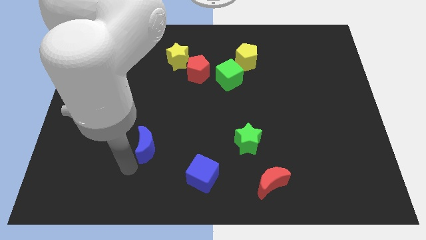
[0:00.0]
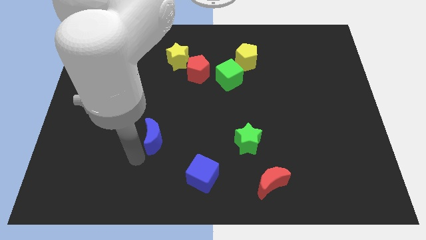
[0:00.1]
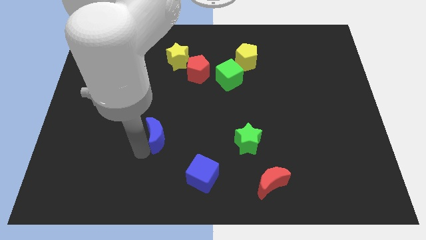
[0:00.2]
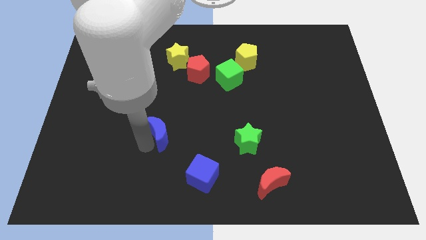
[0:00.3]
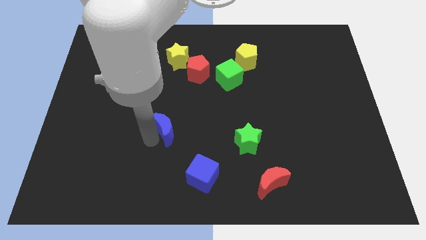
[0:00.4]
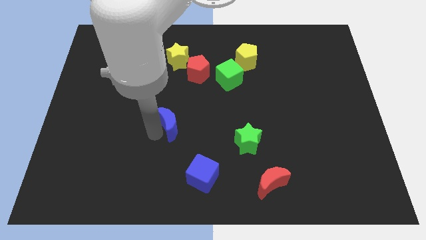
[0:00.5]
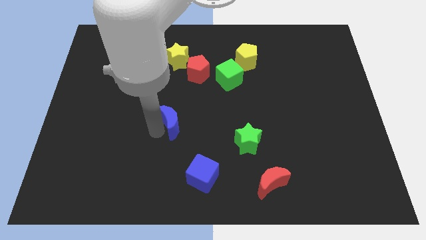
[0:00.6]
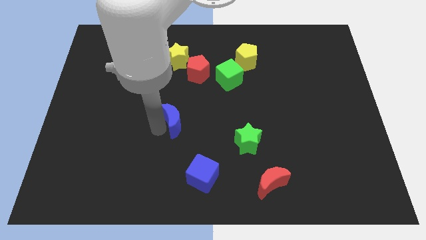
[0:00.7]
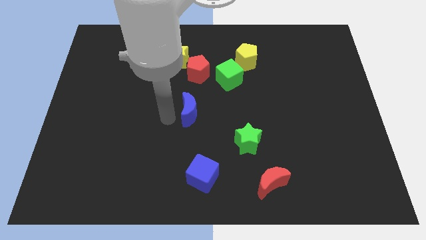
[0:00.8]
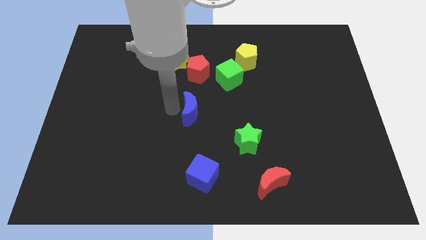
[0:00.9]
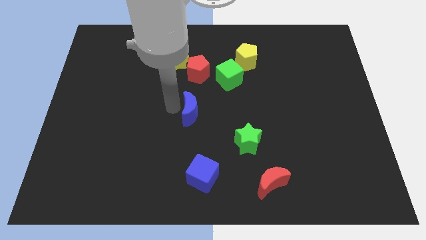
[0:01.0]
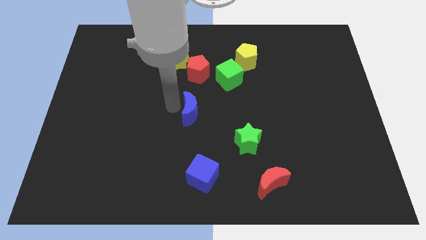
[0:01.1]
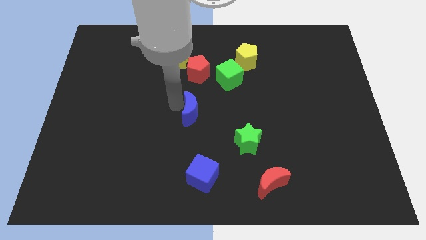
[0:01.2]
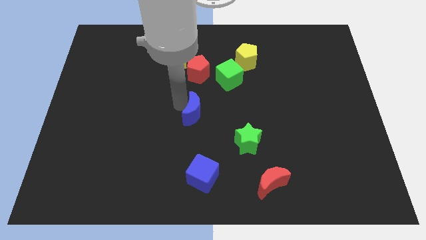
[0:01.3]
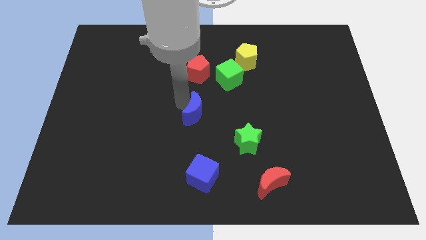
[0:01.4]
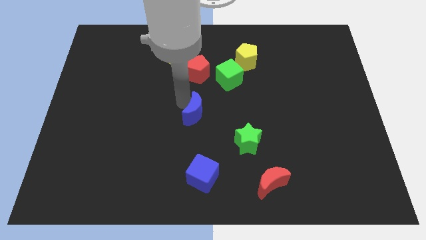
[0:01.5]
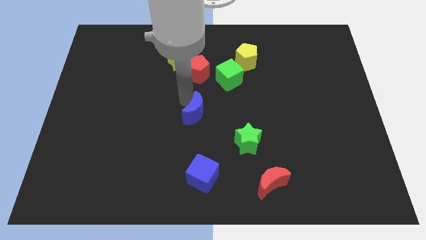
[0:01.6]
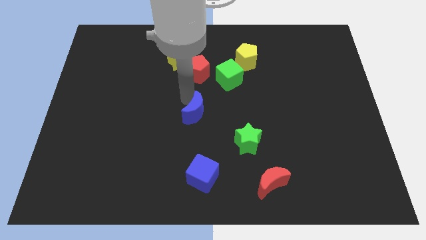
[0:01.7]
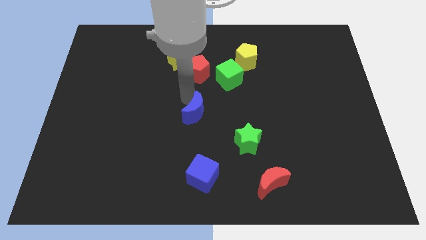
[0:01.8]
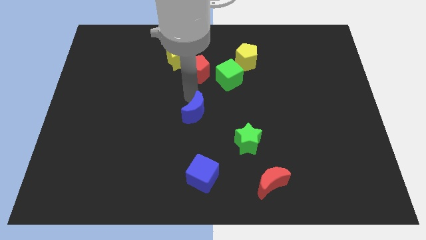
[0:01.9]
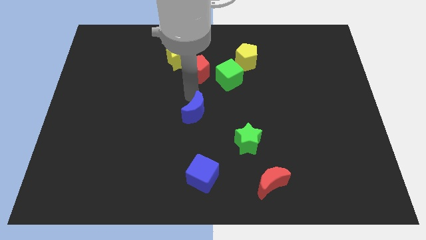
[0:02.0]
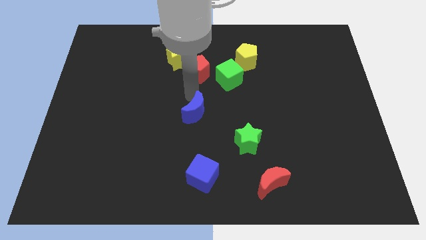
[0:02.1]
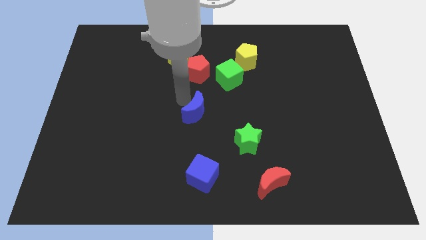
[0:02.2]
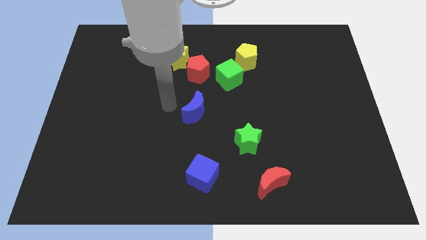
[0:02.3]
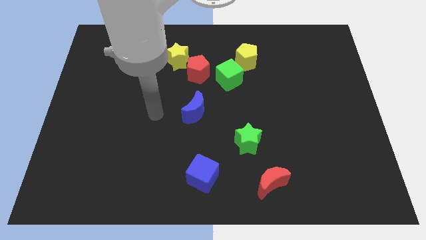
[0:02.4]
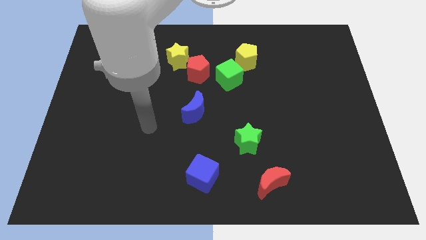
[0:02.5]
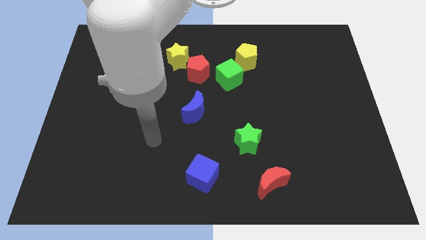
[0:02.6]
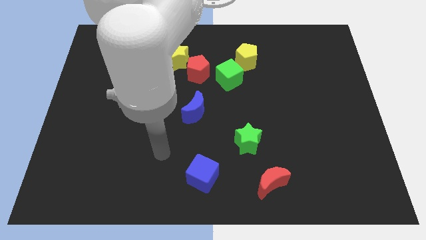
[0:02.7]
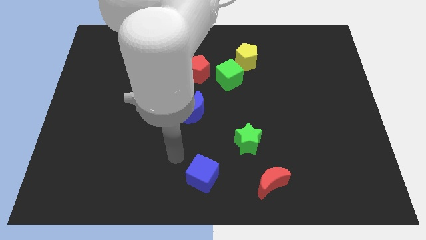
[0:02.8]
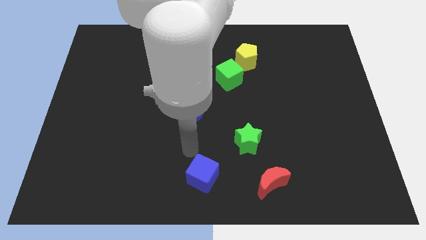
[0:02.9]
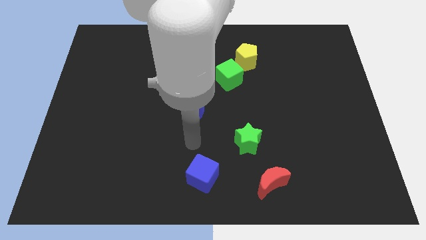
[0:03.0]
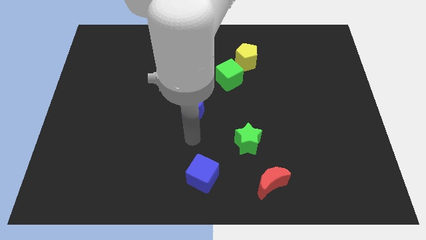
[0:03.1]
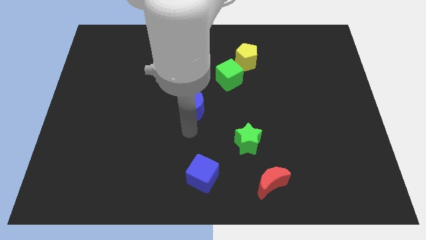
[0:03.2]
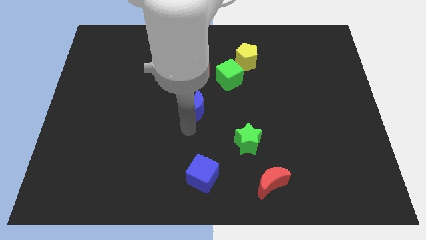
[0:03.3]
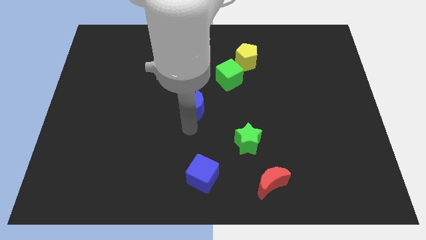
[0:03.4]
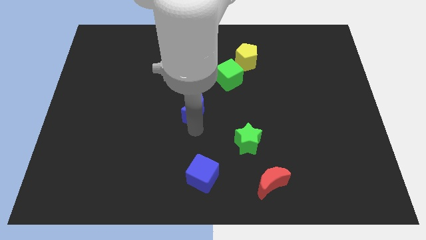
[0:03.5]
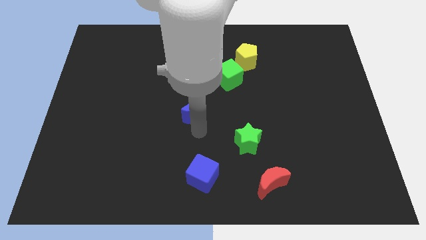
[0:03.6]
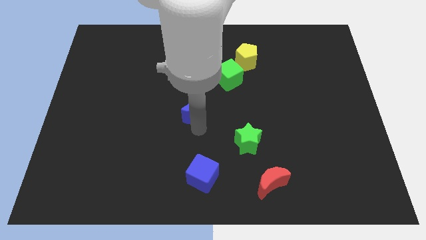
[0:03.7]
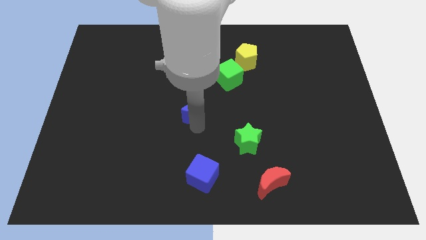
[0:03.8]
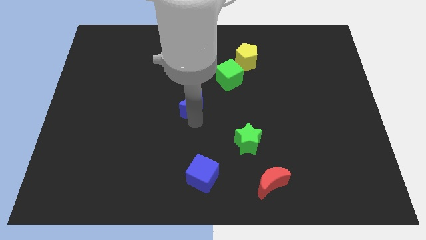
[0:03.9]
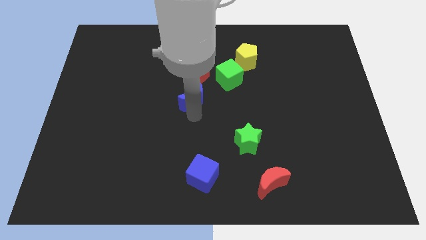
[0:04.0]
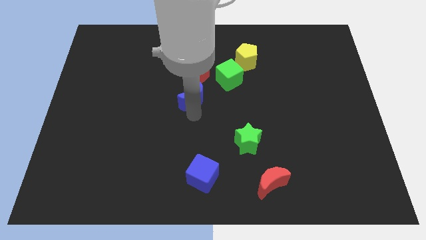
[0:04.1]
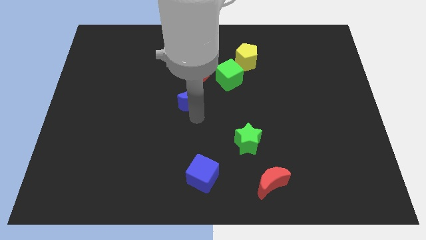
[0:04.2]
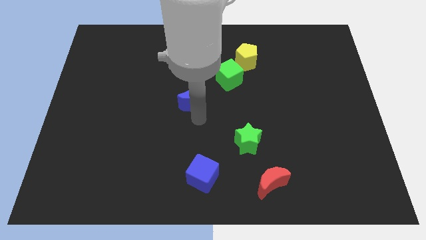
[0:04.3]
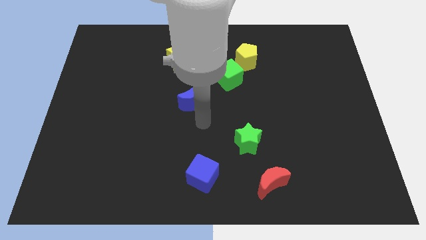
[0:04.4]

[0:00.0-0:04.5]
push the blue crescent to the bottom of the red pentagon

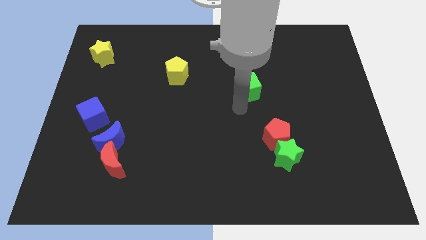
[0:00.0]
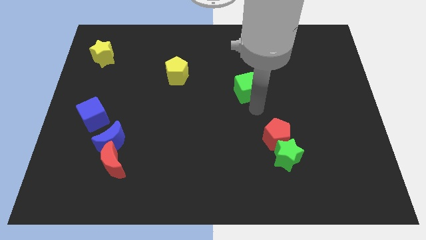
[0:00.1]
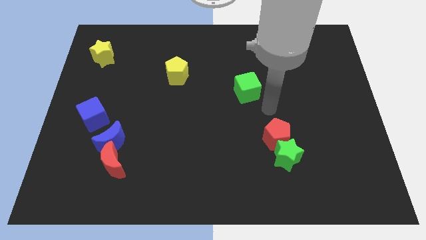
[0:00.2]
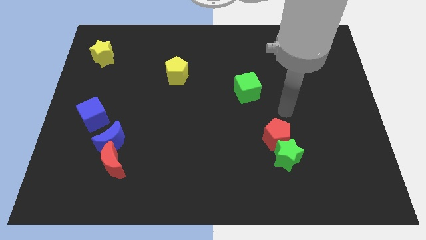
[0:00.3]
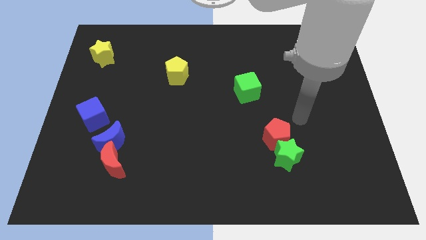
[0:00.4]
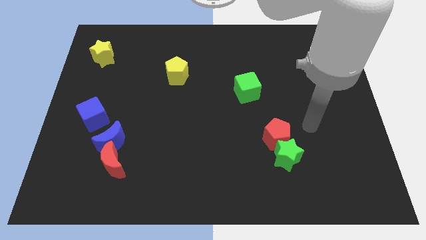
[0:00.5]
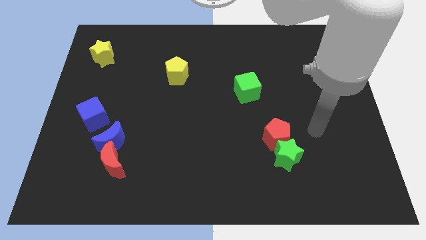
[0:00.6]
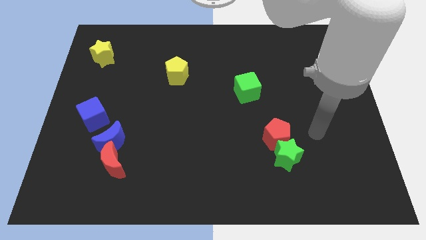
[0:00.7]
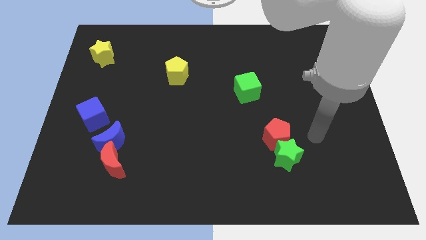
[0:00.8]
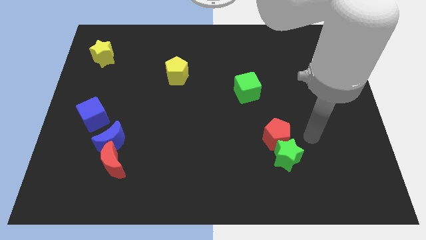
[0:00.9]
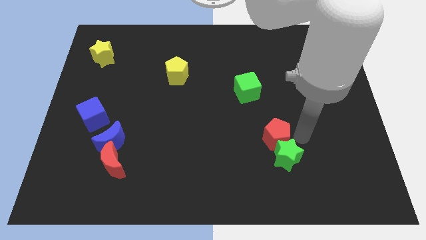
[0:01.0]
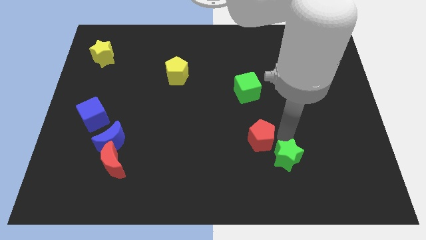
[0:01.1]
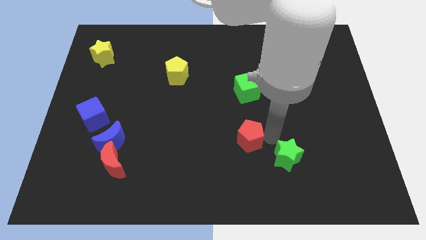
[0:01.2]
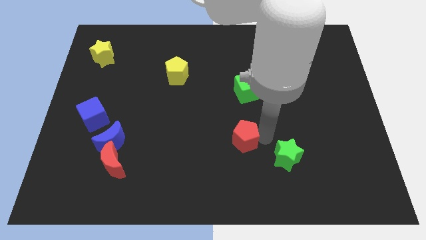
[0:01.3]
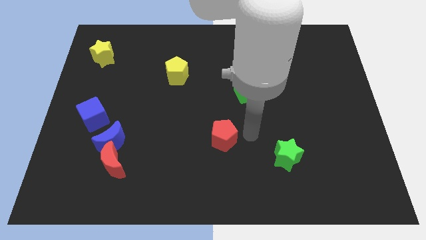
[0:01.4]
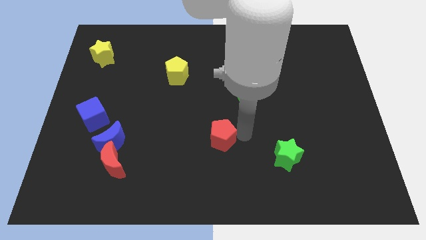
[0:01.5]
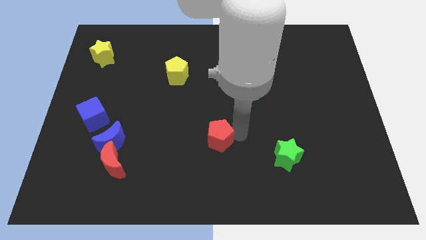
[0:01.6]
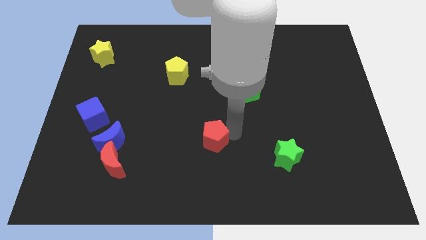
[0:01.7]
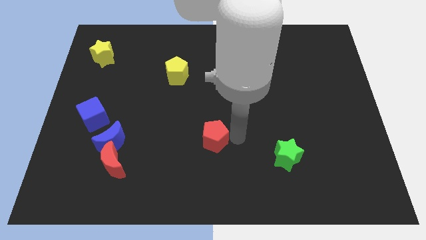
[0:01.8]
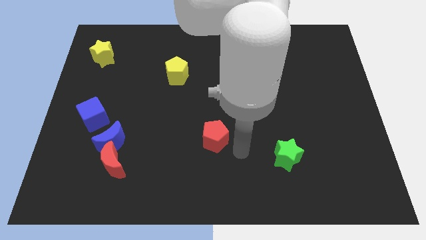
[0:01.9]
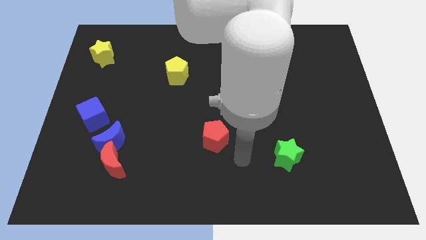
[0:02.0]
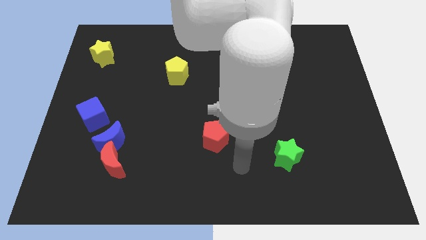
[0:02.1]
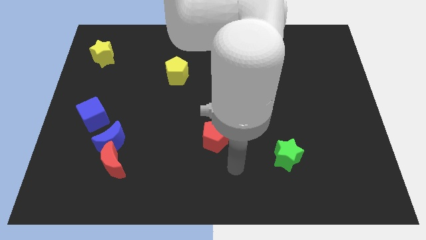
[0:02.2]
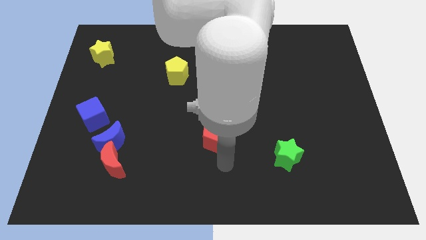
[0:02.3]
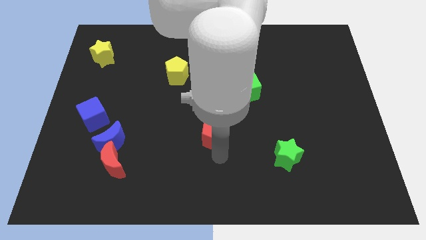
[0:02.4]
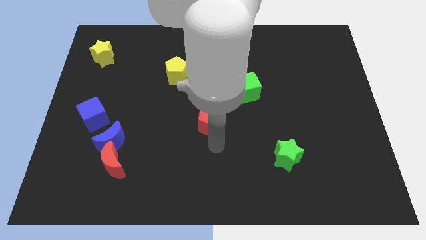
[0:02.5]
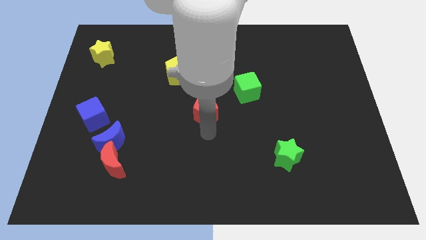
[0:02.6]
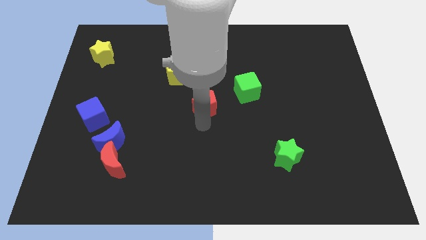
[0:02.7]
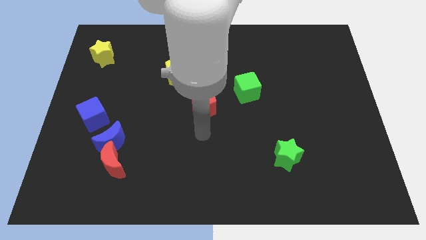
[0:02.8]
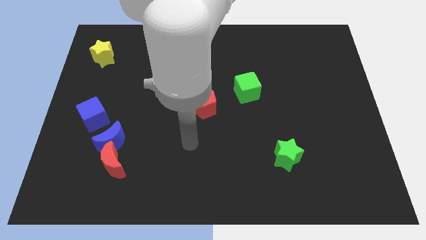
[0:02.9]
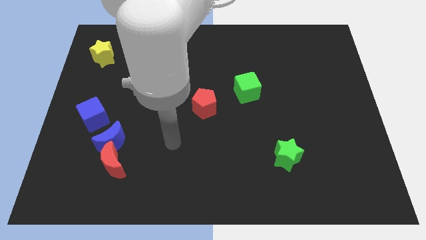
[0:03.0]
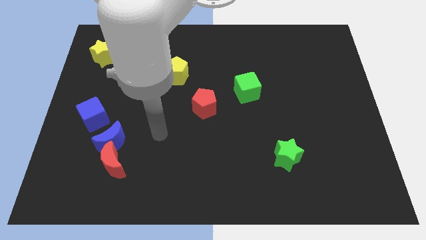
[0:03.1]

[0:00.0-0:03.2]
place the red pentagon to the center of board

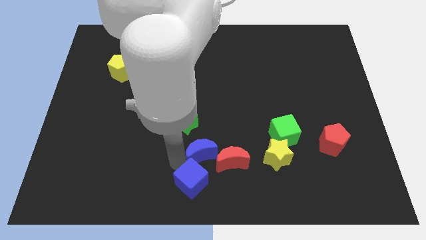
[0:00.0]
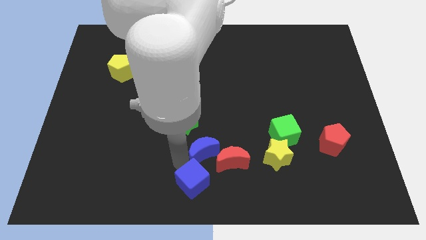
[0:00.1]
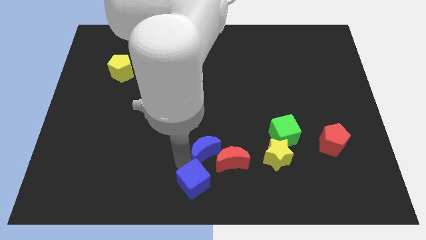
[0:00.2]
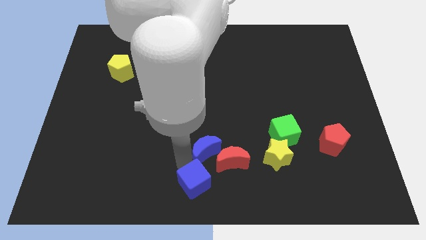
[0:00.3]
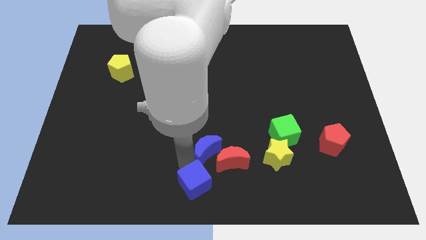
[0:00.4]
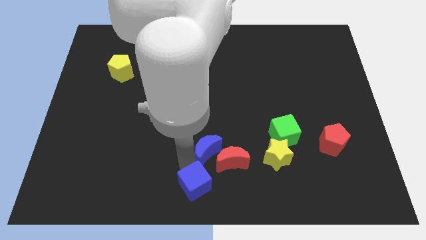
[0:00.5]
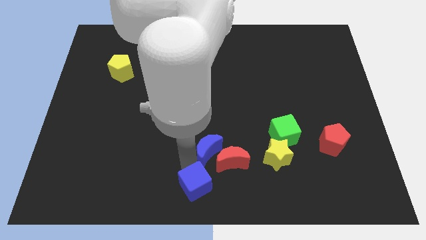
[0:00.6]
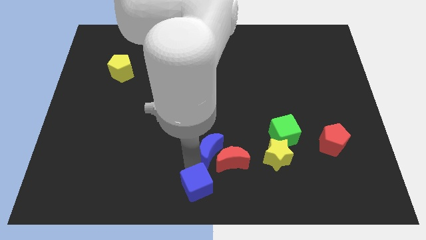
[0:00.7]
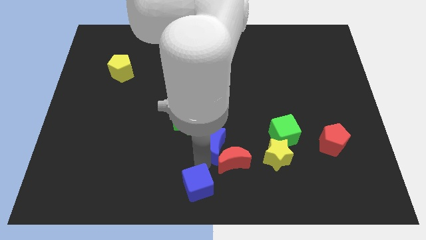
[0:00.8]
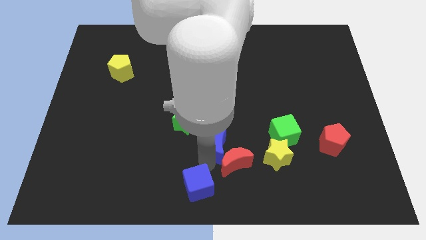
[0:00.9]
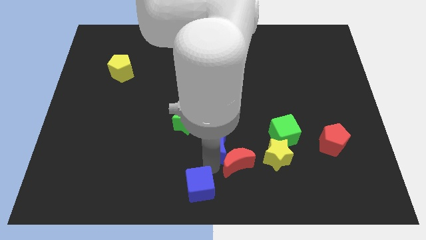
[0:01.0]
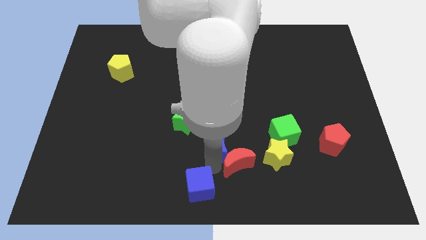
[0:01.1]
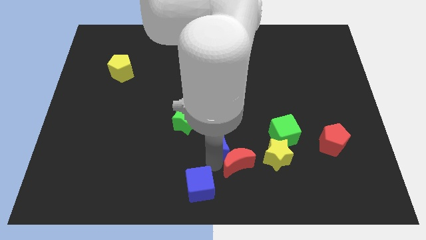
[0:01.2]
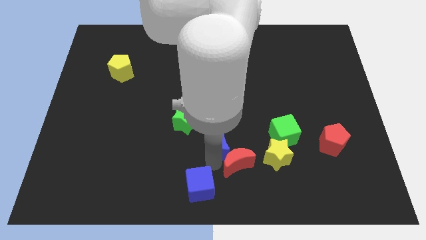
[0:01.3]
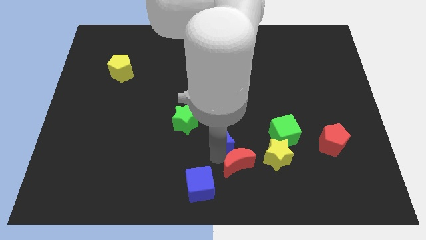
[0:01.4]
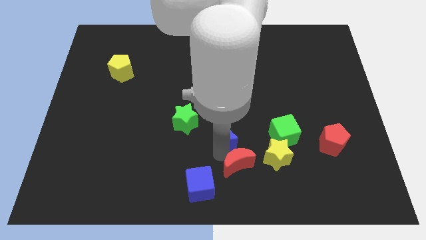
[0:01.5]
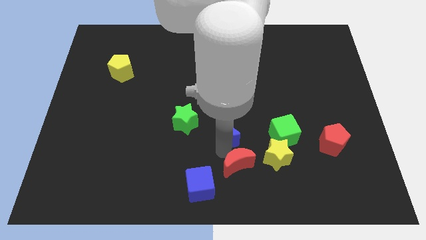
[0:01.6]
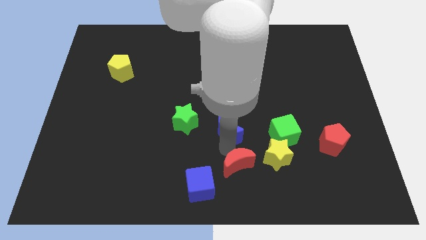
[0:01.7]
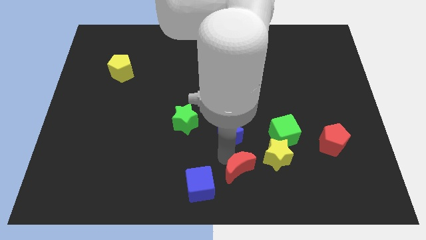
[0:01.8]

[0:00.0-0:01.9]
slide the blue moon between the green blocks
